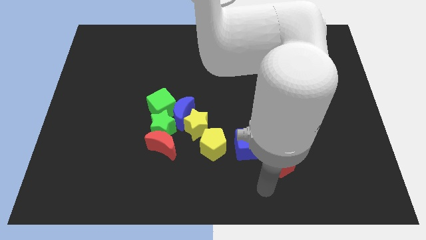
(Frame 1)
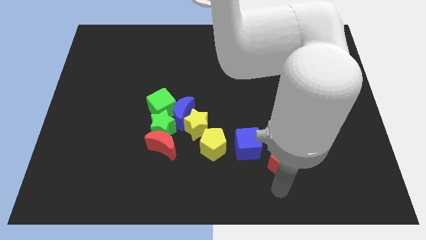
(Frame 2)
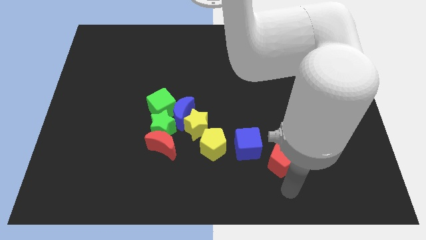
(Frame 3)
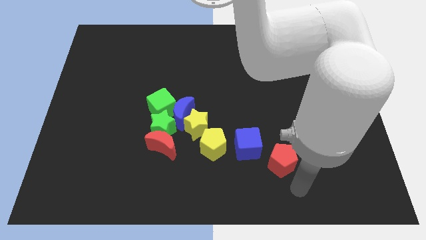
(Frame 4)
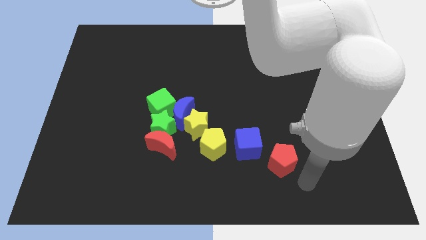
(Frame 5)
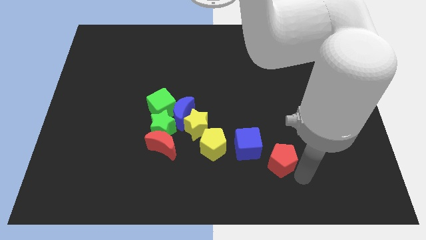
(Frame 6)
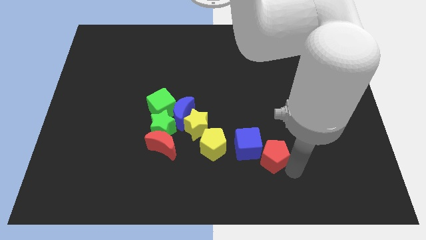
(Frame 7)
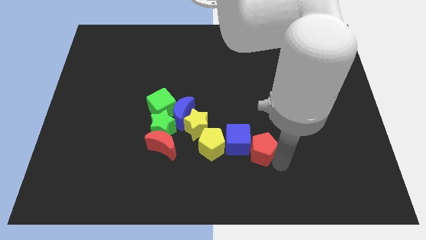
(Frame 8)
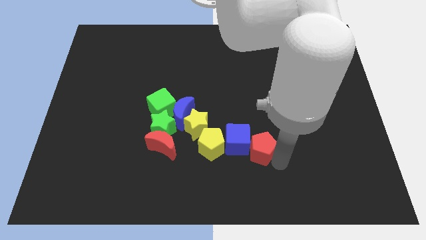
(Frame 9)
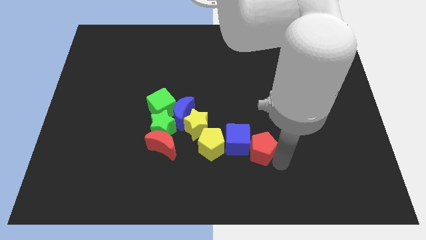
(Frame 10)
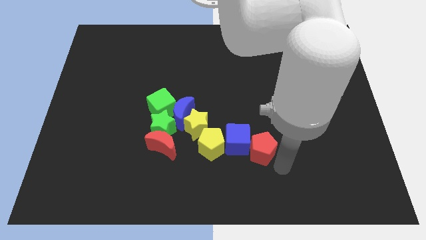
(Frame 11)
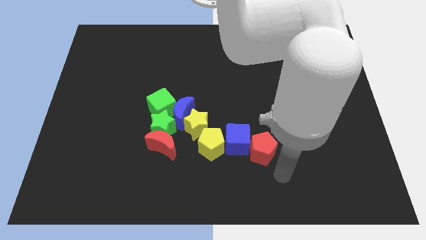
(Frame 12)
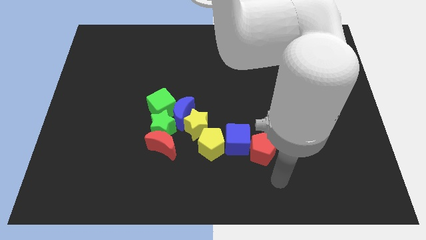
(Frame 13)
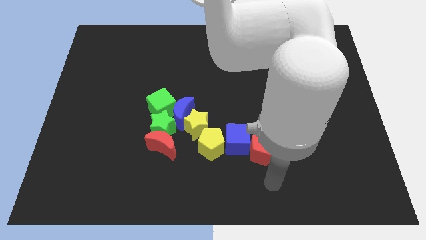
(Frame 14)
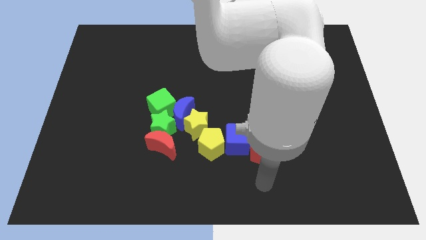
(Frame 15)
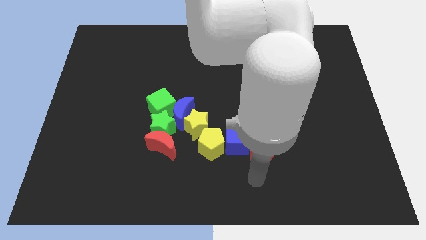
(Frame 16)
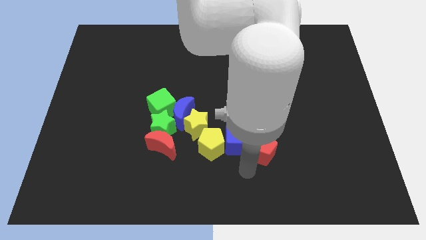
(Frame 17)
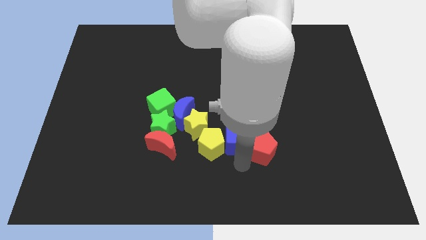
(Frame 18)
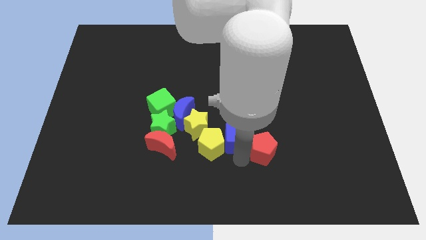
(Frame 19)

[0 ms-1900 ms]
push the red pentagon into the blue cube

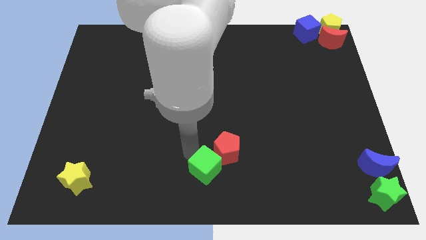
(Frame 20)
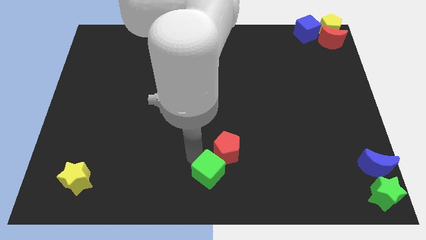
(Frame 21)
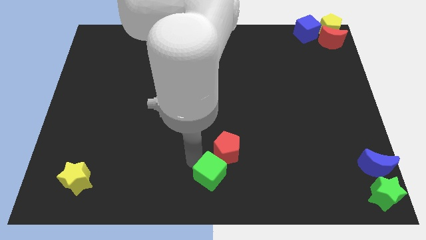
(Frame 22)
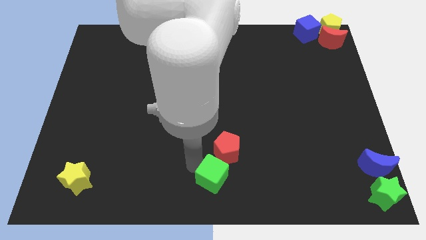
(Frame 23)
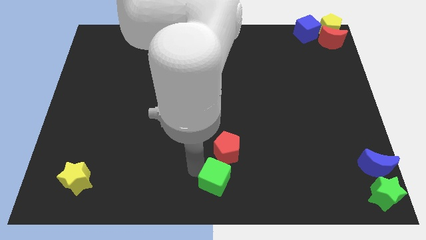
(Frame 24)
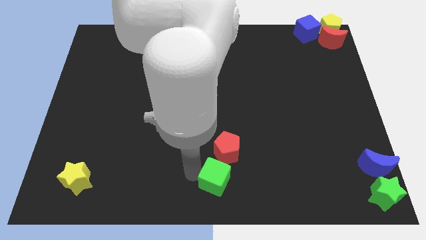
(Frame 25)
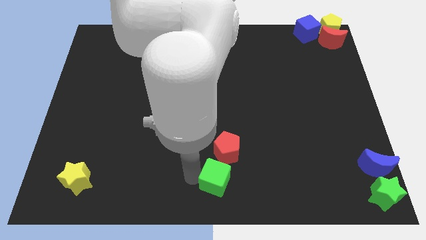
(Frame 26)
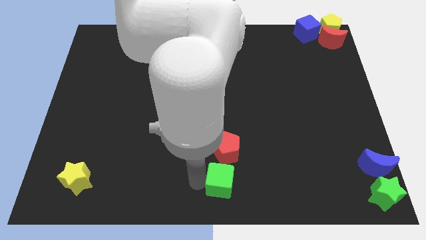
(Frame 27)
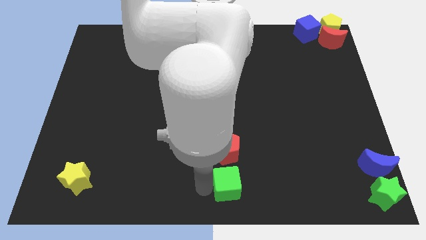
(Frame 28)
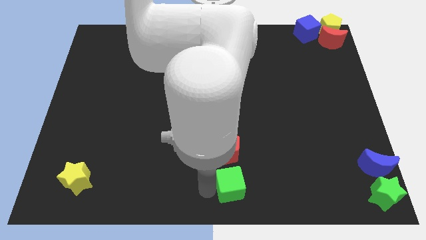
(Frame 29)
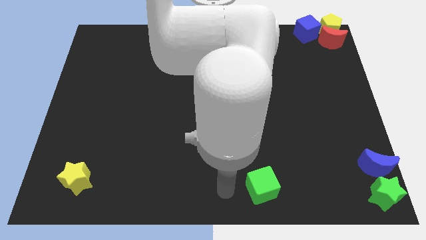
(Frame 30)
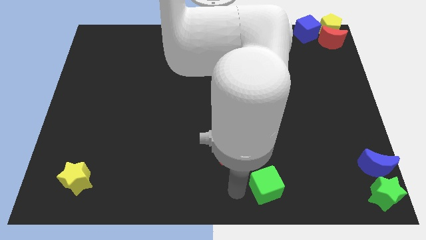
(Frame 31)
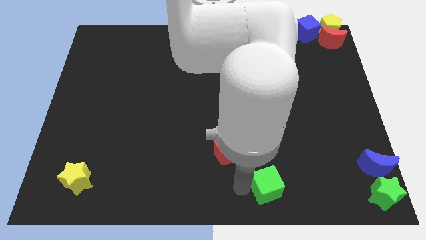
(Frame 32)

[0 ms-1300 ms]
separate green cube from the red pentagon

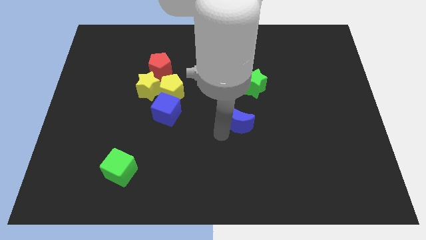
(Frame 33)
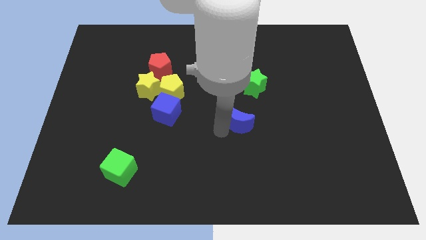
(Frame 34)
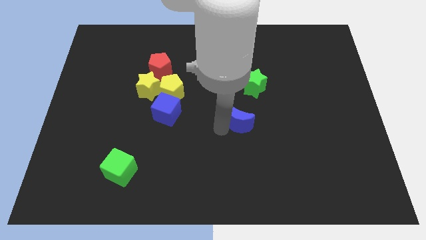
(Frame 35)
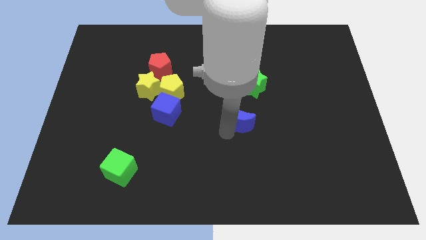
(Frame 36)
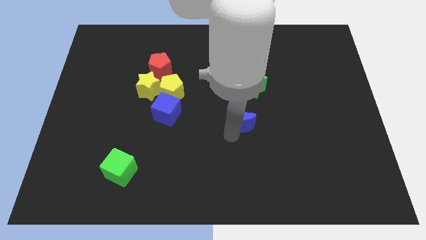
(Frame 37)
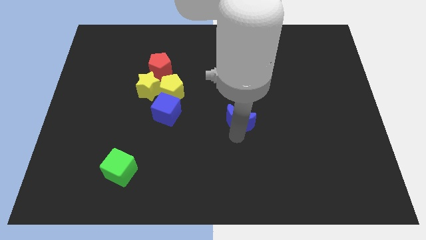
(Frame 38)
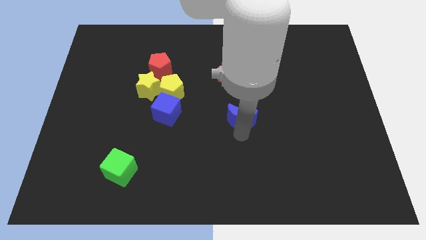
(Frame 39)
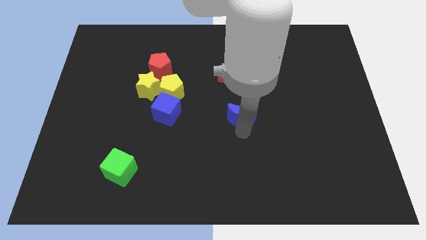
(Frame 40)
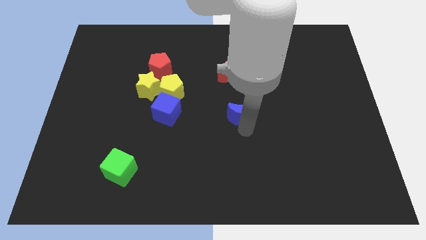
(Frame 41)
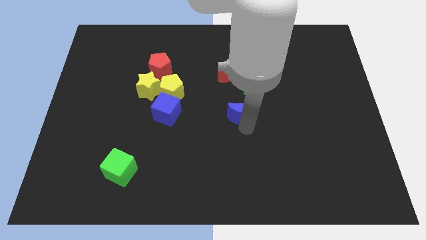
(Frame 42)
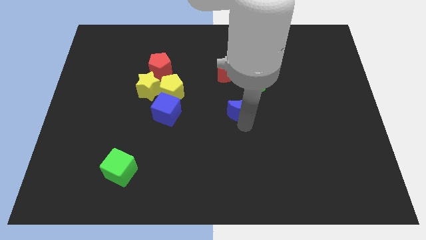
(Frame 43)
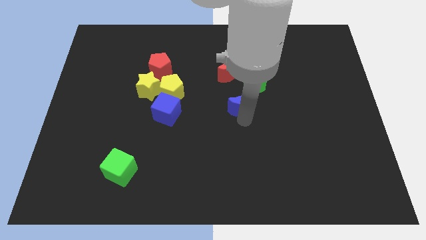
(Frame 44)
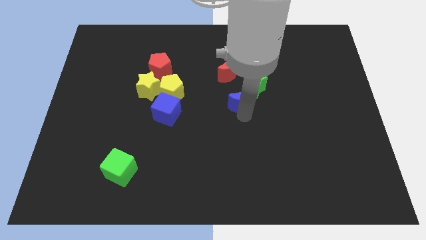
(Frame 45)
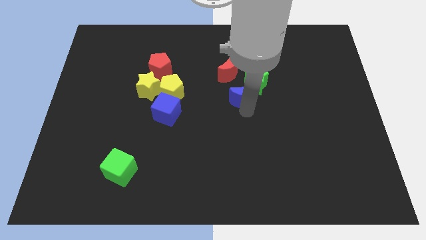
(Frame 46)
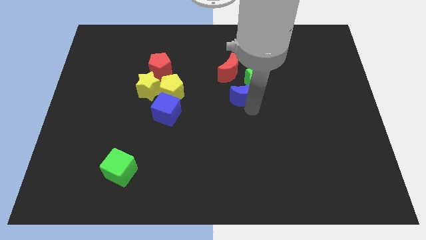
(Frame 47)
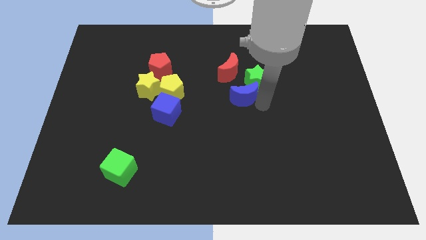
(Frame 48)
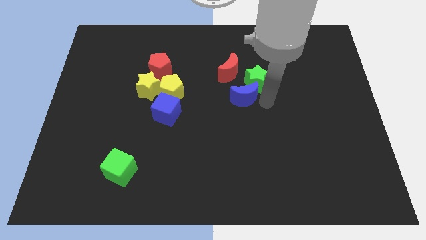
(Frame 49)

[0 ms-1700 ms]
push the blue crescent into the green star

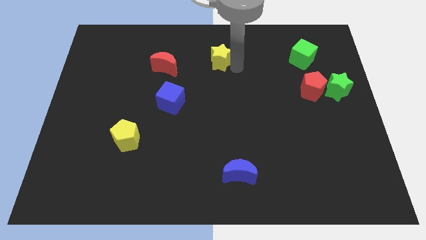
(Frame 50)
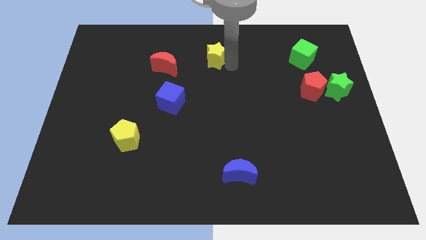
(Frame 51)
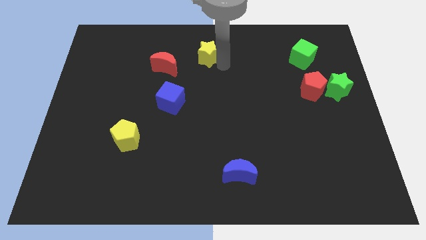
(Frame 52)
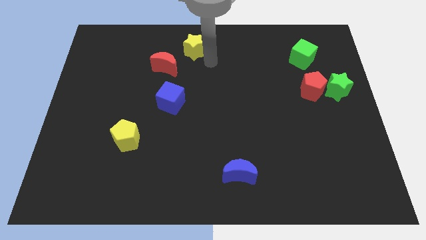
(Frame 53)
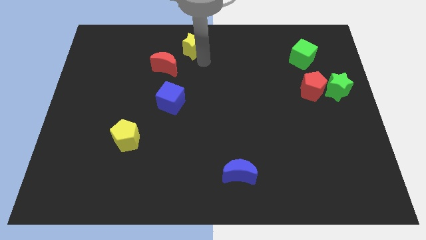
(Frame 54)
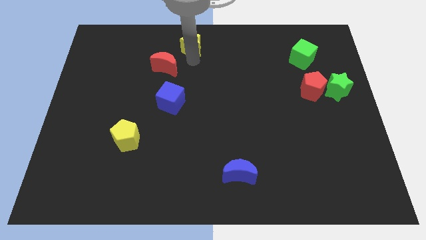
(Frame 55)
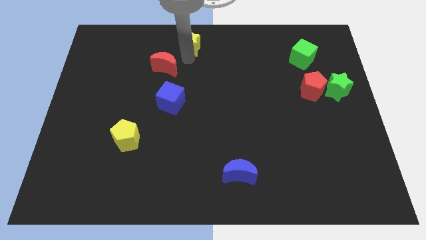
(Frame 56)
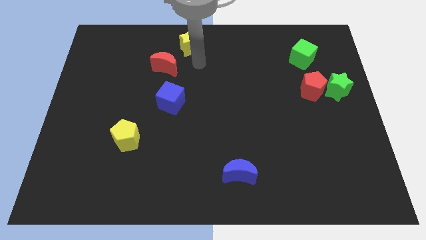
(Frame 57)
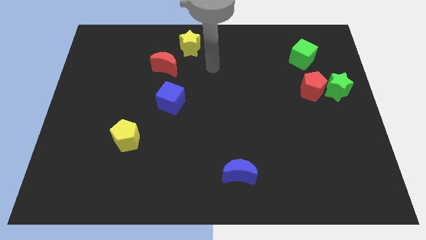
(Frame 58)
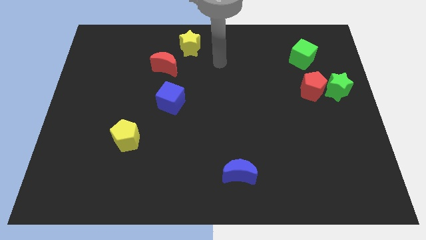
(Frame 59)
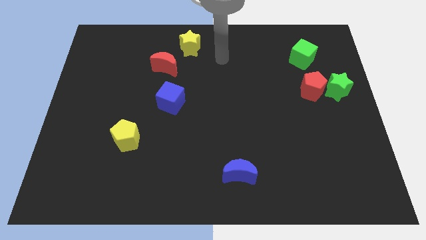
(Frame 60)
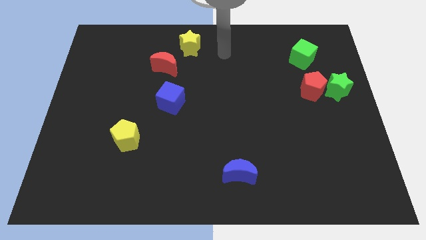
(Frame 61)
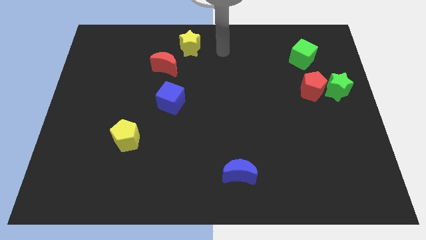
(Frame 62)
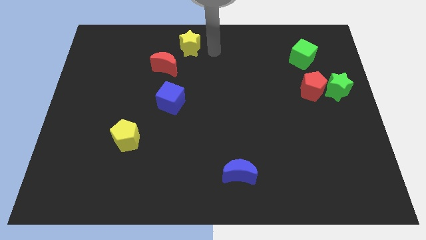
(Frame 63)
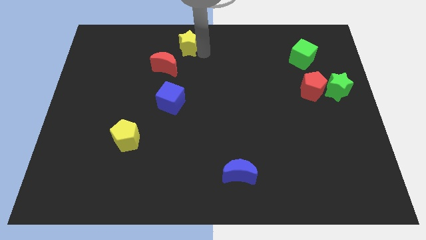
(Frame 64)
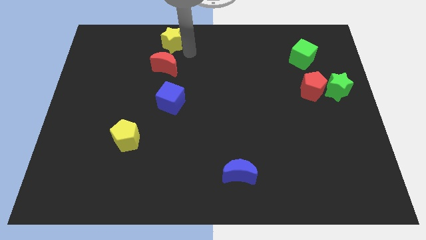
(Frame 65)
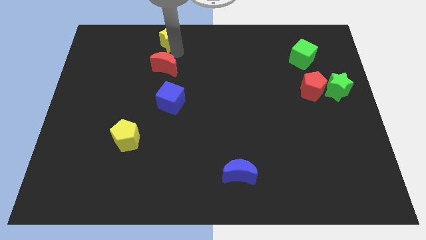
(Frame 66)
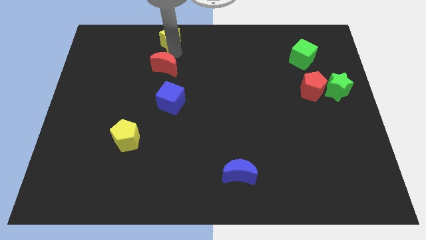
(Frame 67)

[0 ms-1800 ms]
place the yellow star at the top of red moon

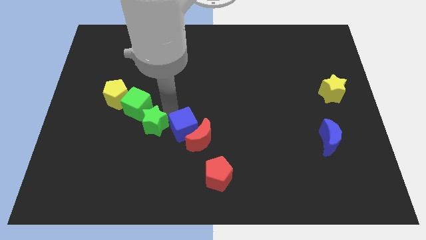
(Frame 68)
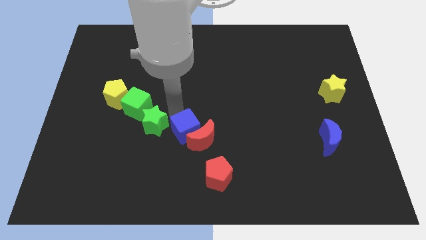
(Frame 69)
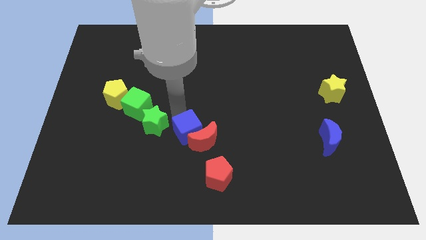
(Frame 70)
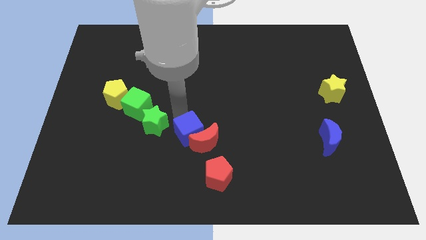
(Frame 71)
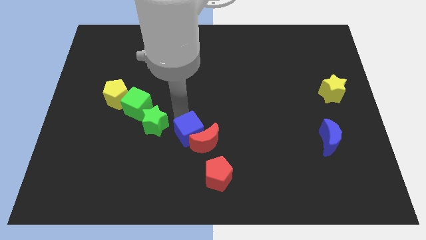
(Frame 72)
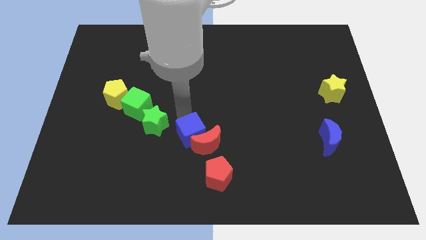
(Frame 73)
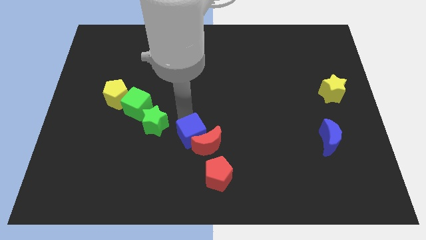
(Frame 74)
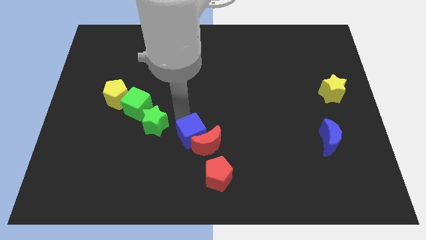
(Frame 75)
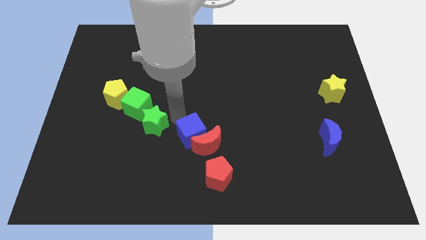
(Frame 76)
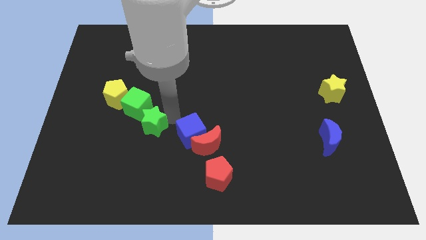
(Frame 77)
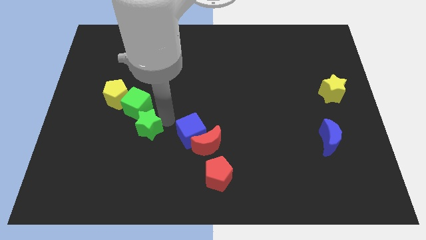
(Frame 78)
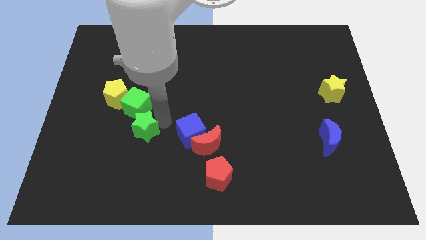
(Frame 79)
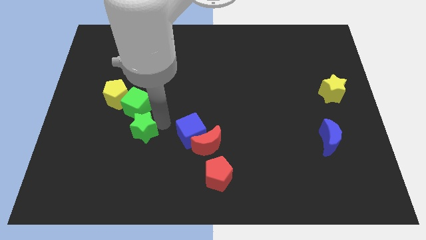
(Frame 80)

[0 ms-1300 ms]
push the blue cube and red crescent close to red pentagon

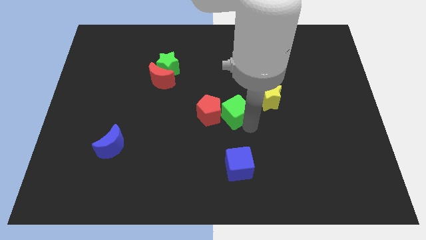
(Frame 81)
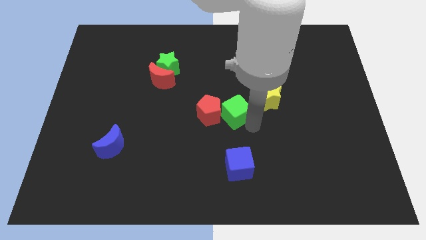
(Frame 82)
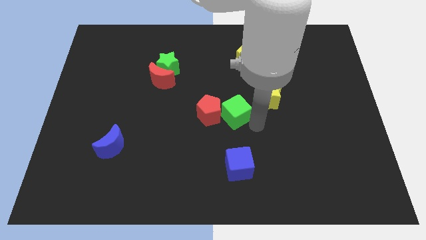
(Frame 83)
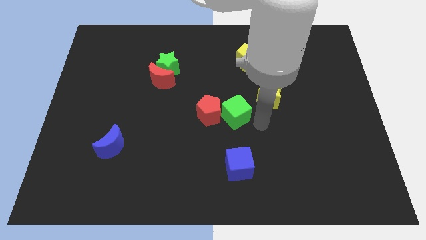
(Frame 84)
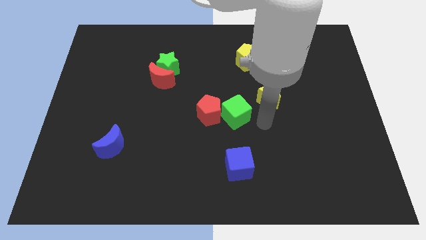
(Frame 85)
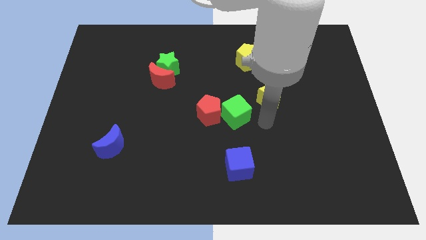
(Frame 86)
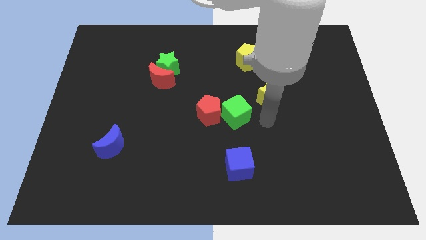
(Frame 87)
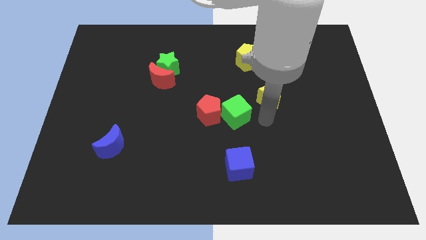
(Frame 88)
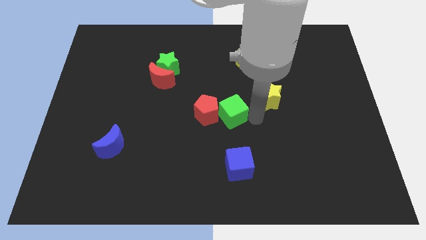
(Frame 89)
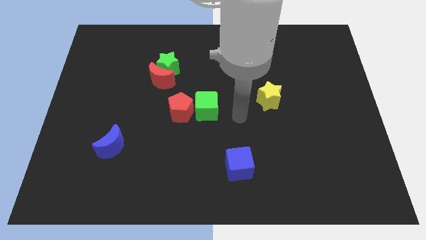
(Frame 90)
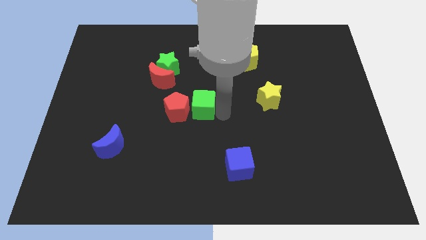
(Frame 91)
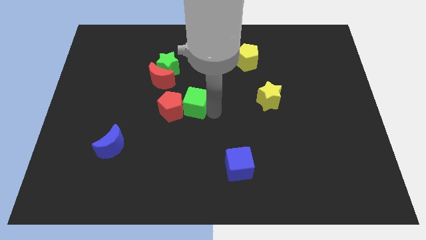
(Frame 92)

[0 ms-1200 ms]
place the green cube in between red pentagon and yellow star
